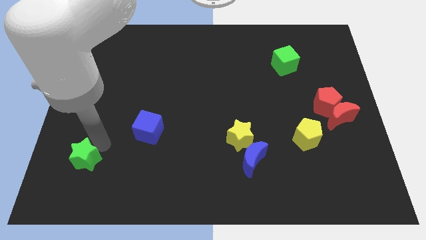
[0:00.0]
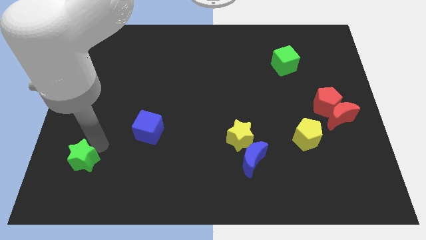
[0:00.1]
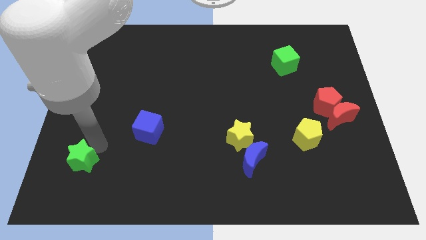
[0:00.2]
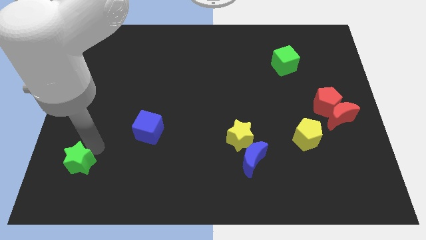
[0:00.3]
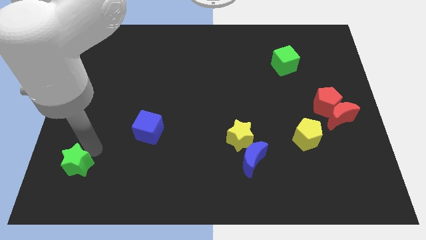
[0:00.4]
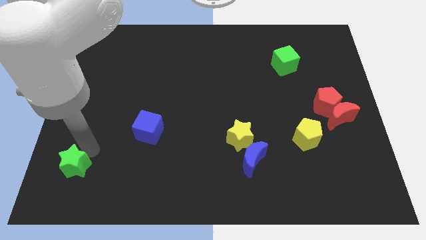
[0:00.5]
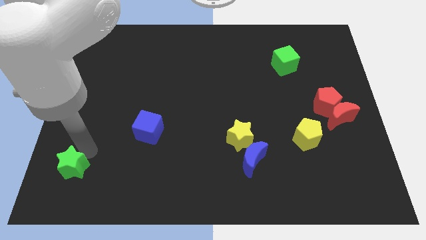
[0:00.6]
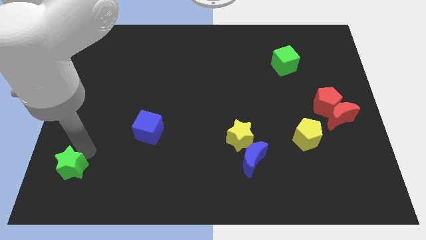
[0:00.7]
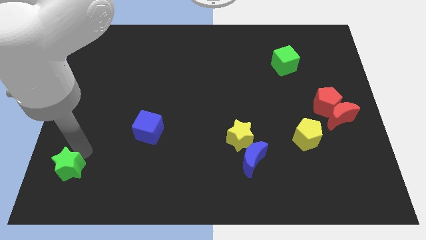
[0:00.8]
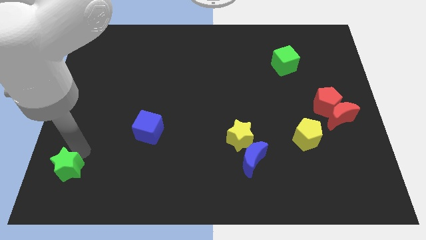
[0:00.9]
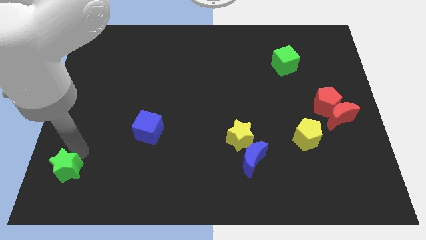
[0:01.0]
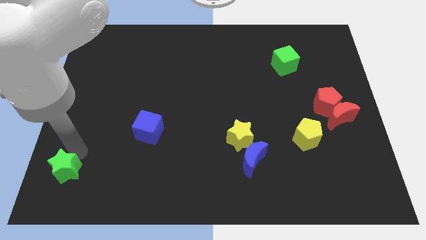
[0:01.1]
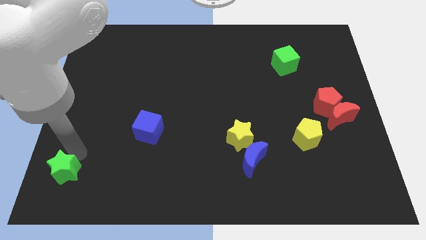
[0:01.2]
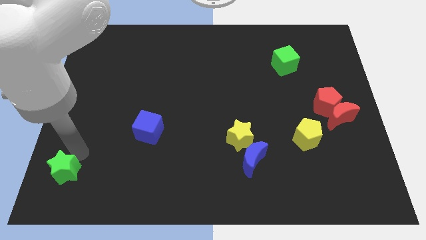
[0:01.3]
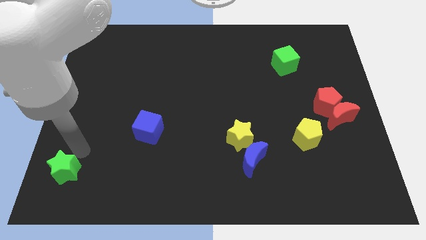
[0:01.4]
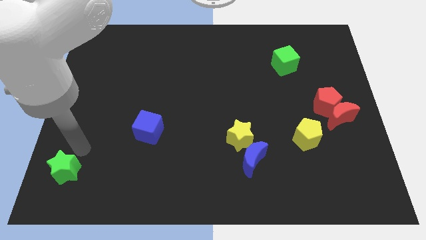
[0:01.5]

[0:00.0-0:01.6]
move green star downwards

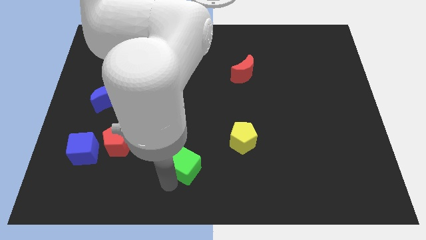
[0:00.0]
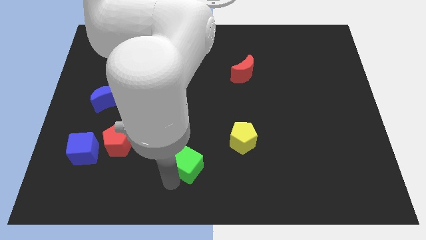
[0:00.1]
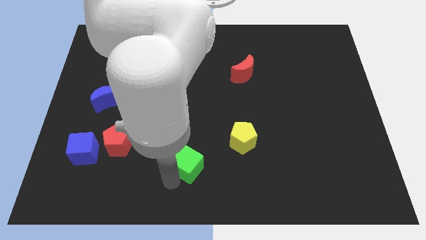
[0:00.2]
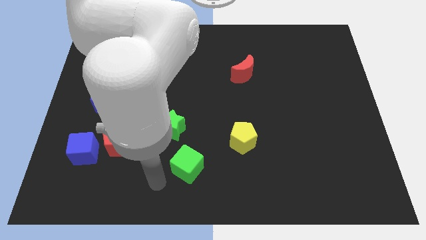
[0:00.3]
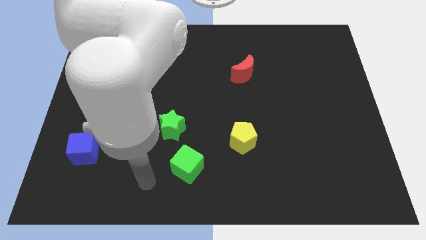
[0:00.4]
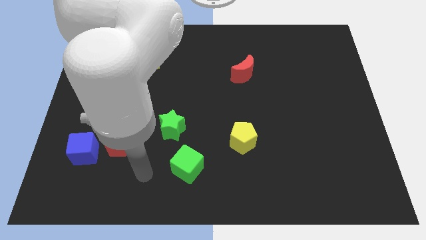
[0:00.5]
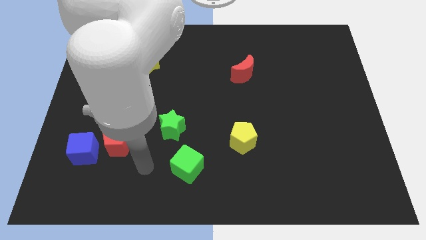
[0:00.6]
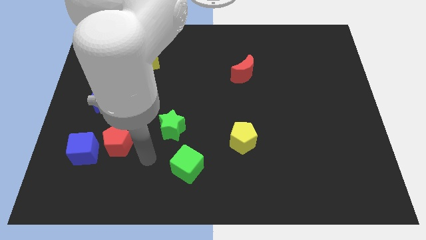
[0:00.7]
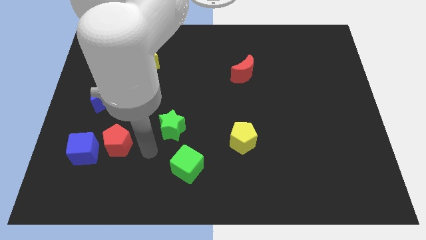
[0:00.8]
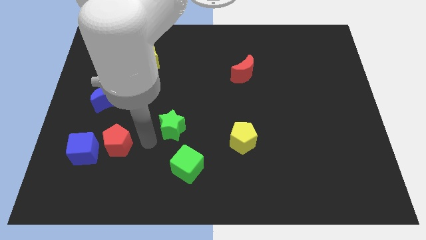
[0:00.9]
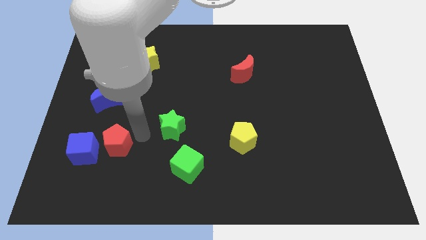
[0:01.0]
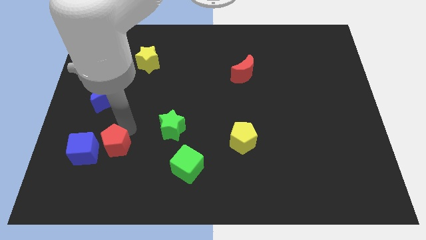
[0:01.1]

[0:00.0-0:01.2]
slightly push green cube

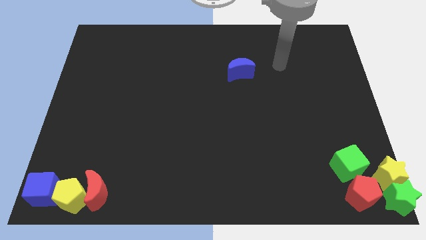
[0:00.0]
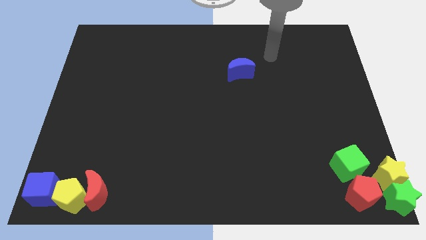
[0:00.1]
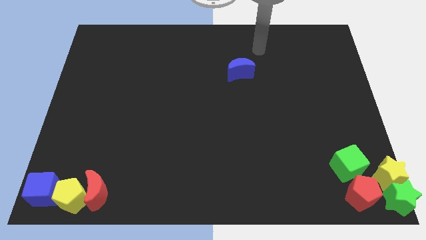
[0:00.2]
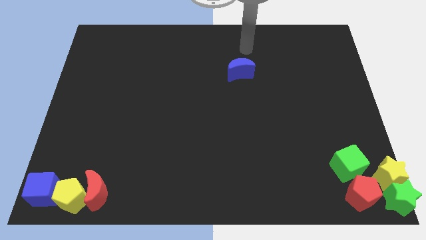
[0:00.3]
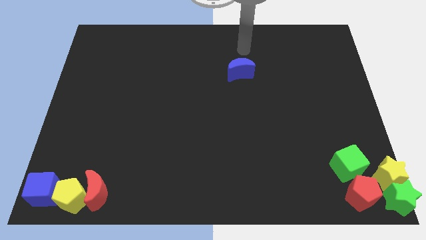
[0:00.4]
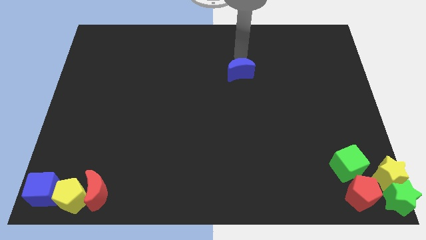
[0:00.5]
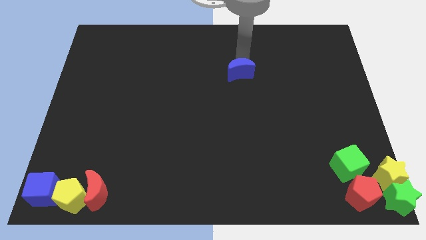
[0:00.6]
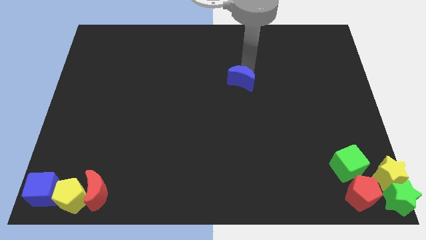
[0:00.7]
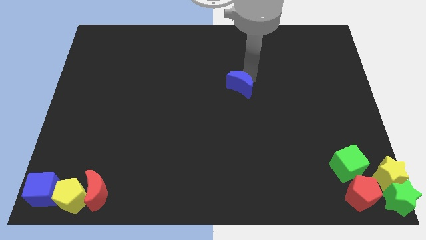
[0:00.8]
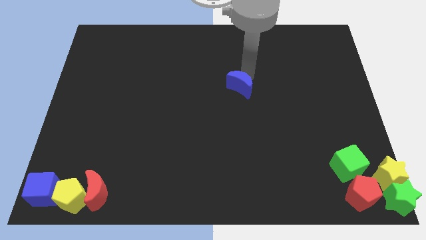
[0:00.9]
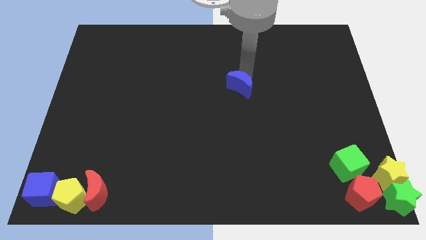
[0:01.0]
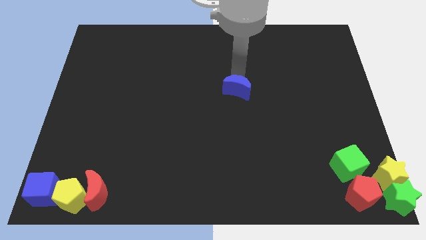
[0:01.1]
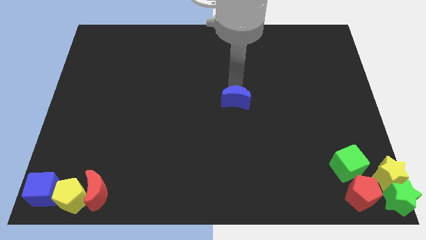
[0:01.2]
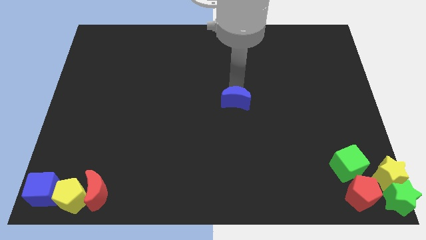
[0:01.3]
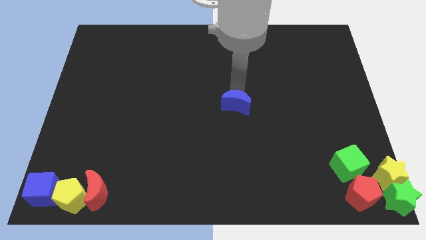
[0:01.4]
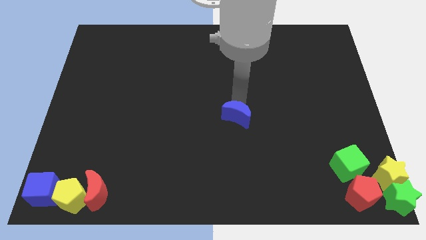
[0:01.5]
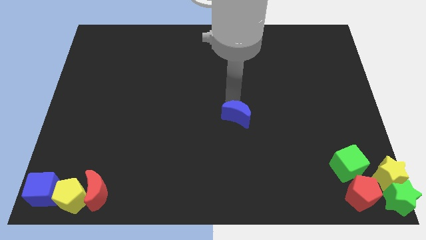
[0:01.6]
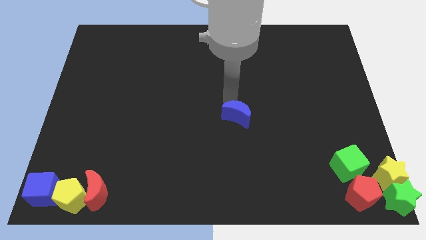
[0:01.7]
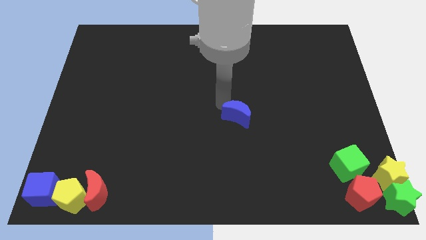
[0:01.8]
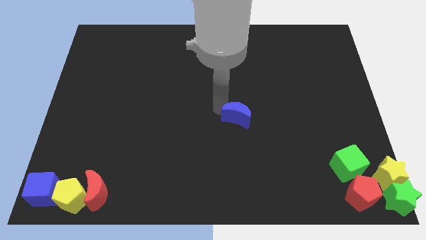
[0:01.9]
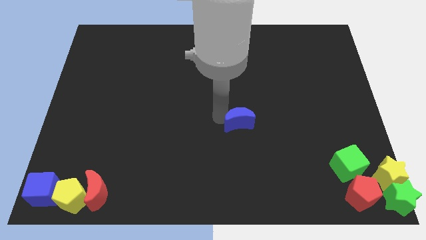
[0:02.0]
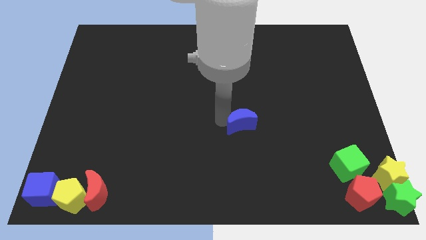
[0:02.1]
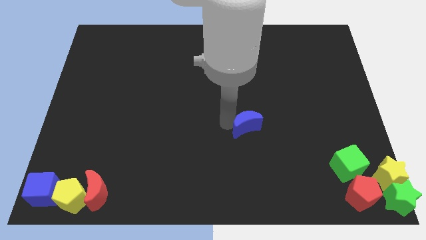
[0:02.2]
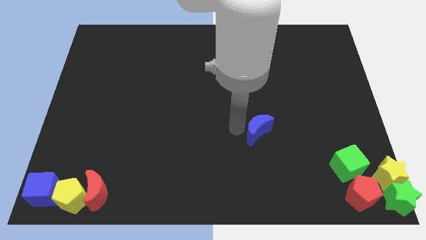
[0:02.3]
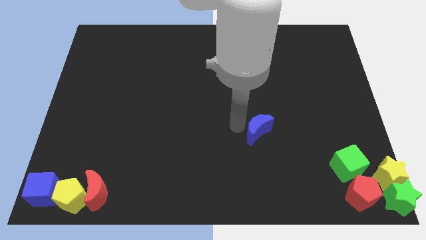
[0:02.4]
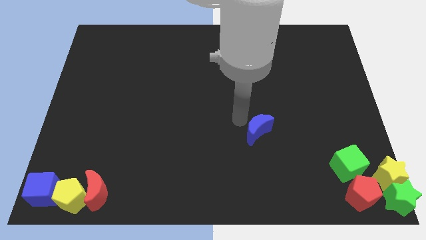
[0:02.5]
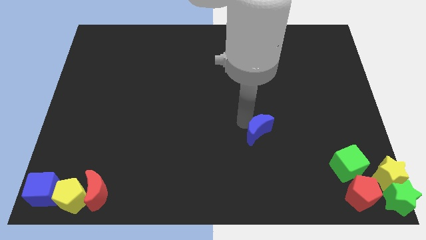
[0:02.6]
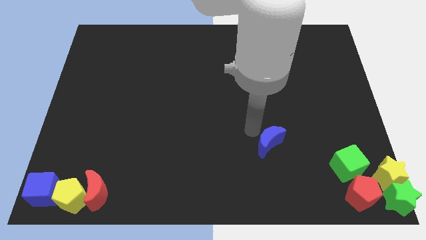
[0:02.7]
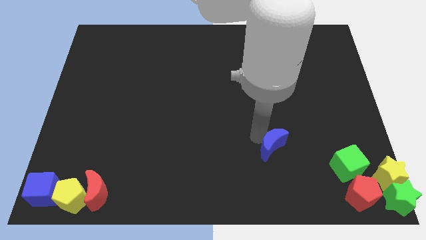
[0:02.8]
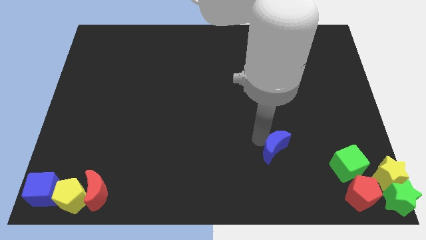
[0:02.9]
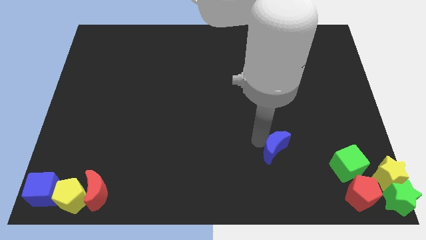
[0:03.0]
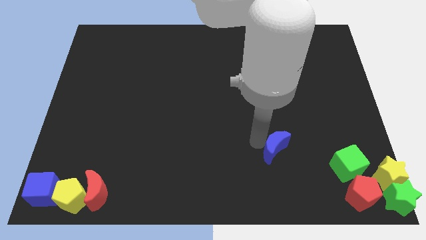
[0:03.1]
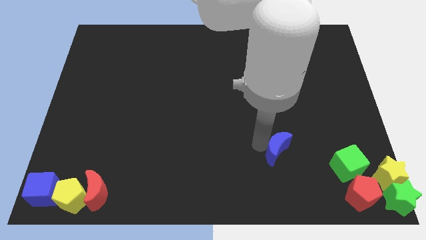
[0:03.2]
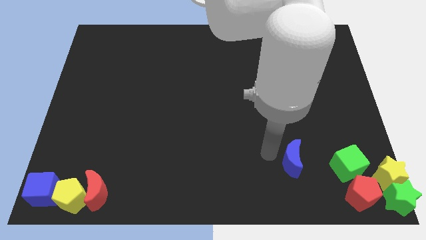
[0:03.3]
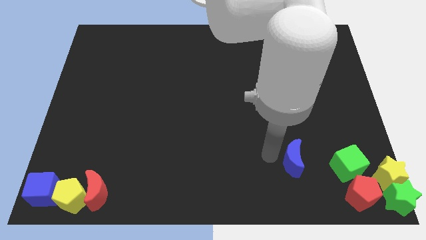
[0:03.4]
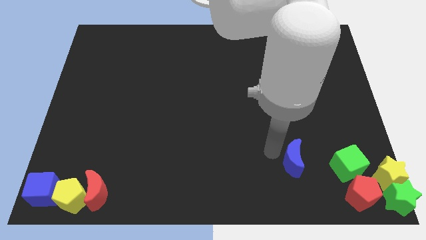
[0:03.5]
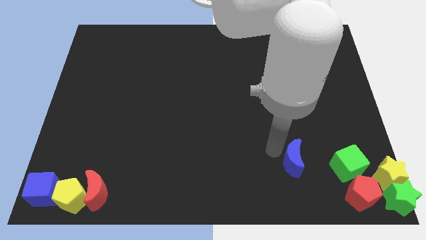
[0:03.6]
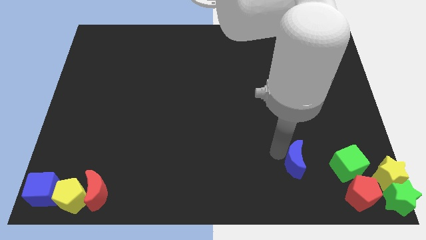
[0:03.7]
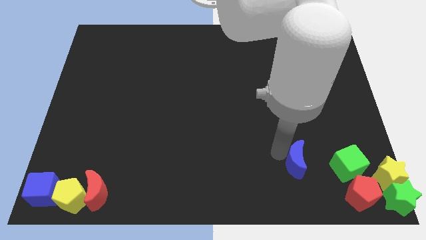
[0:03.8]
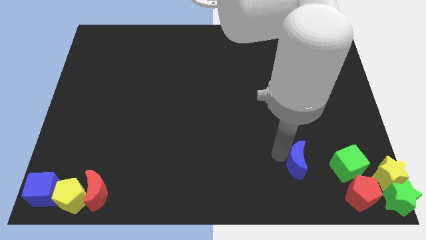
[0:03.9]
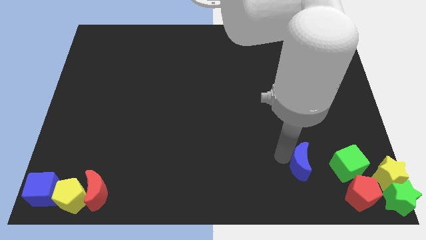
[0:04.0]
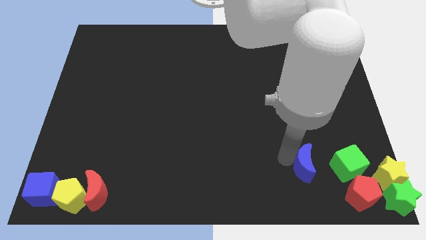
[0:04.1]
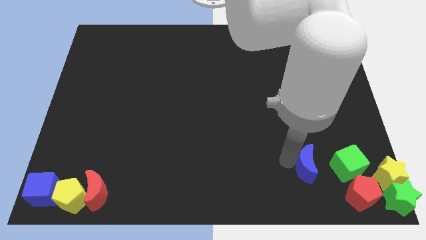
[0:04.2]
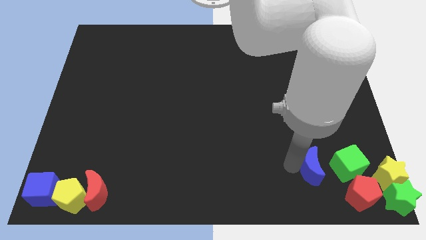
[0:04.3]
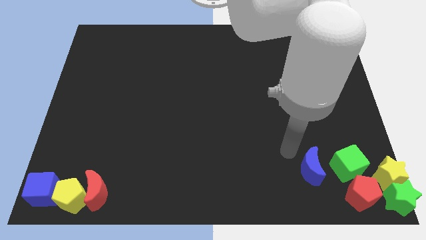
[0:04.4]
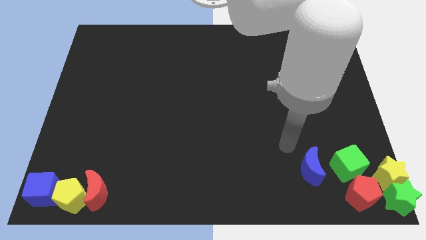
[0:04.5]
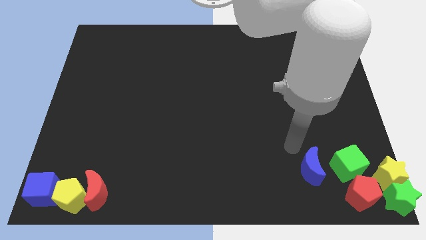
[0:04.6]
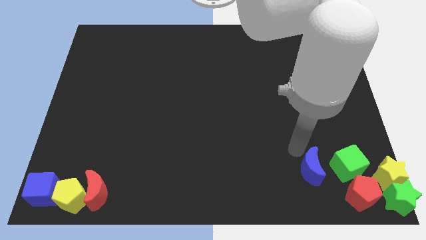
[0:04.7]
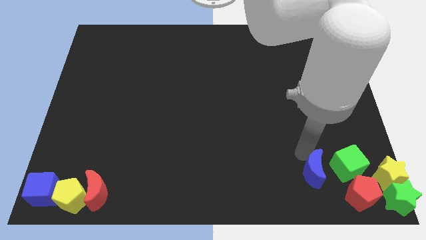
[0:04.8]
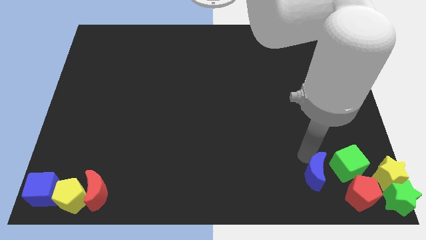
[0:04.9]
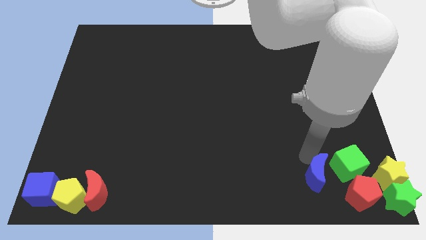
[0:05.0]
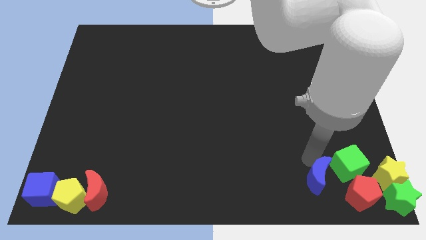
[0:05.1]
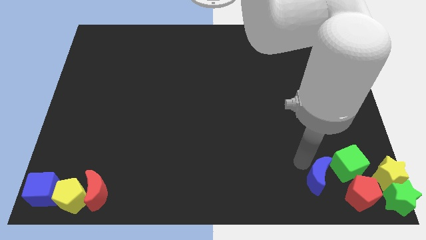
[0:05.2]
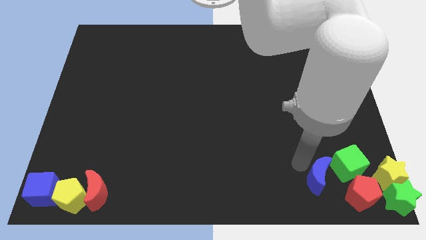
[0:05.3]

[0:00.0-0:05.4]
move blue moon left beside the green cube

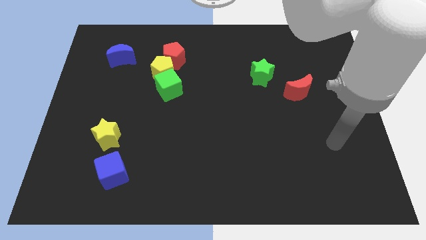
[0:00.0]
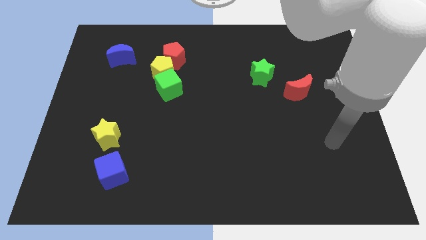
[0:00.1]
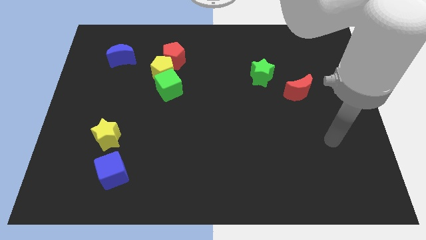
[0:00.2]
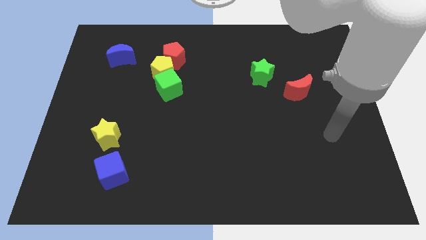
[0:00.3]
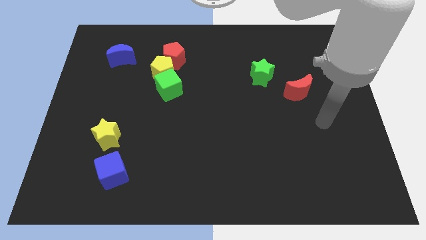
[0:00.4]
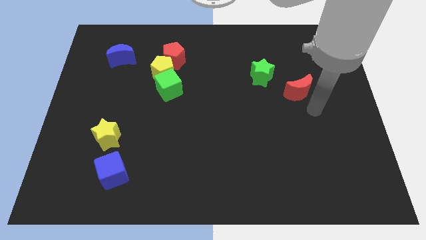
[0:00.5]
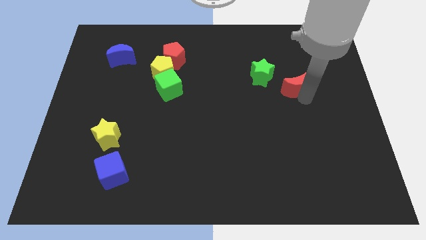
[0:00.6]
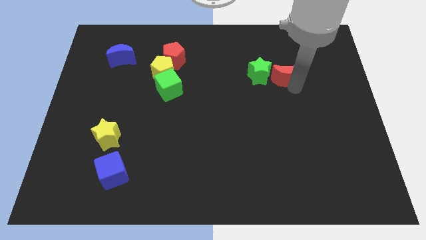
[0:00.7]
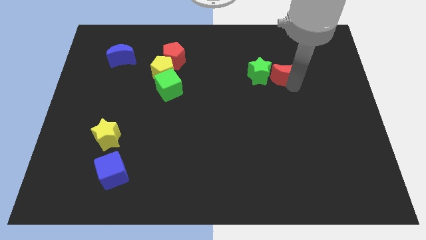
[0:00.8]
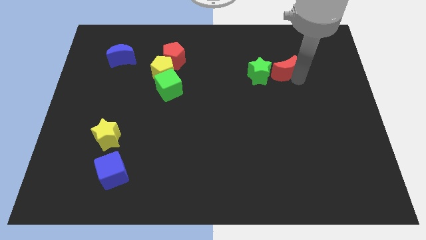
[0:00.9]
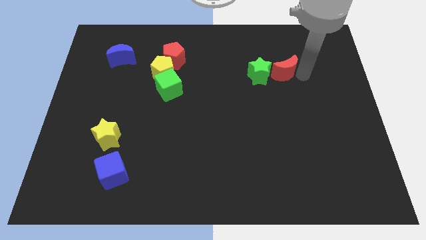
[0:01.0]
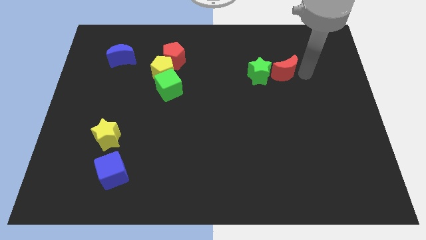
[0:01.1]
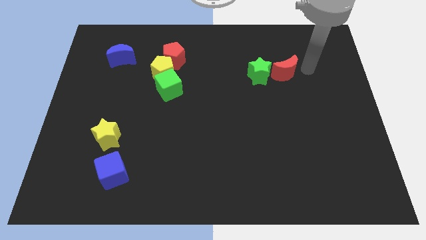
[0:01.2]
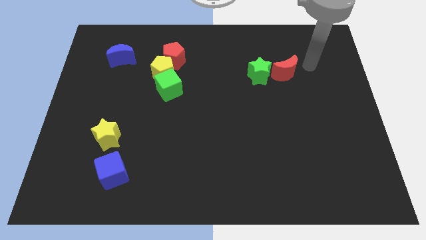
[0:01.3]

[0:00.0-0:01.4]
push red crescent beside green star
